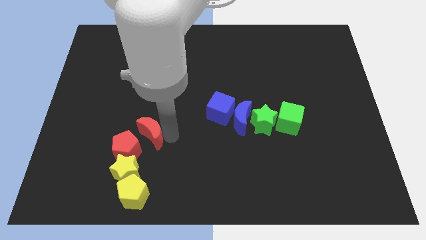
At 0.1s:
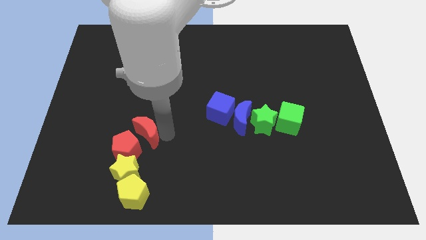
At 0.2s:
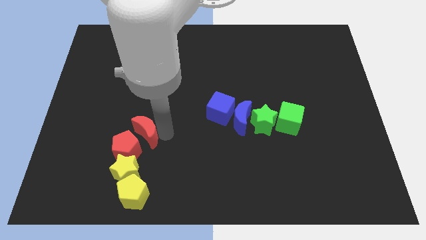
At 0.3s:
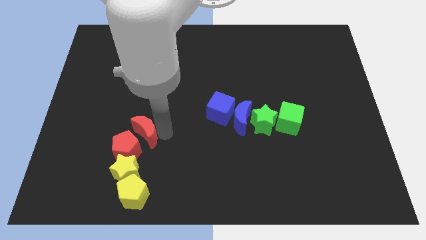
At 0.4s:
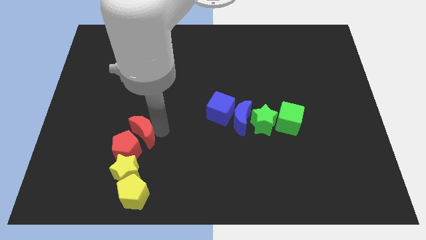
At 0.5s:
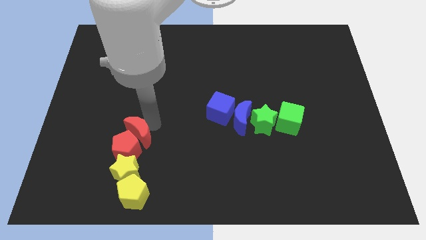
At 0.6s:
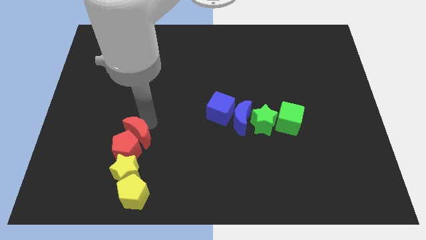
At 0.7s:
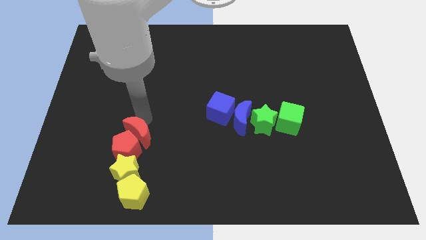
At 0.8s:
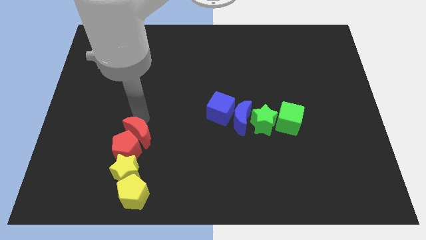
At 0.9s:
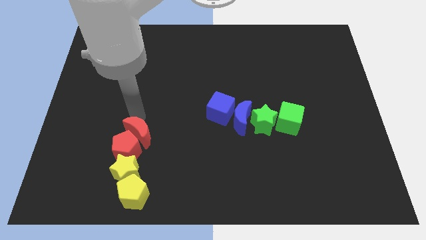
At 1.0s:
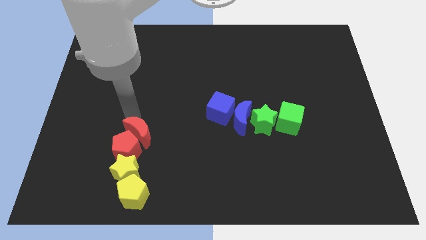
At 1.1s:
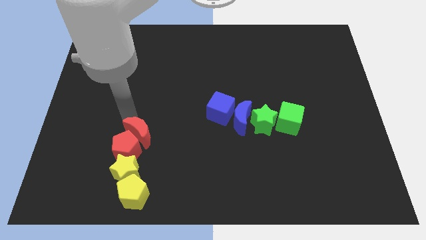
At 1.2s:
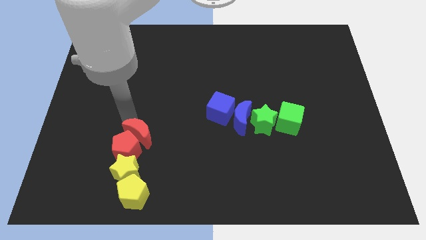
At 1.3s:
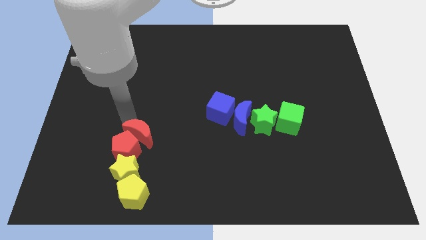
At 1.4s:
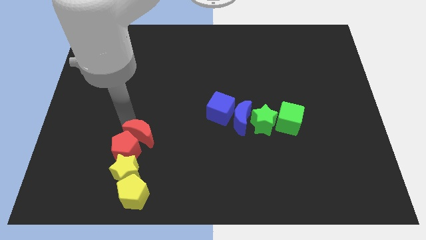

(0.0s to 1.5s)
move the red crescent into the red pentagon

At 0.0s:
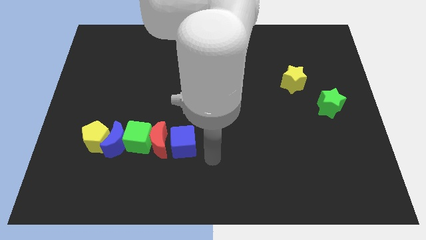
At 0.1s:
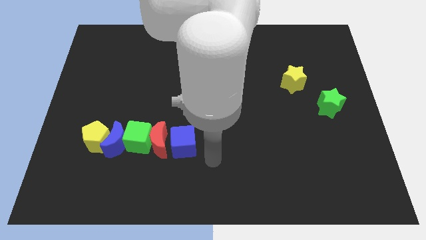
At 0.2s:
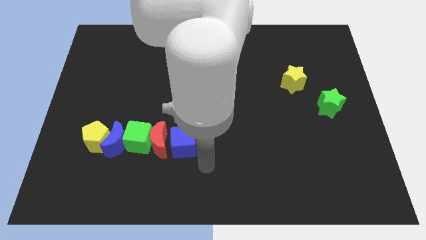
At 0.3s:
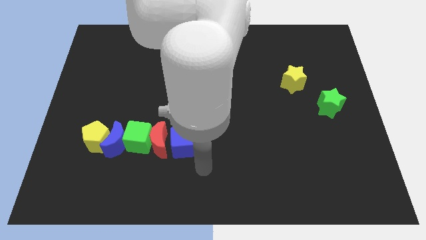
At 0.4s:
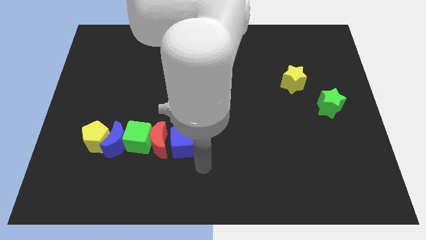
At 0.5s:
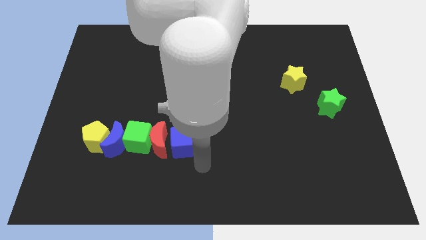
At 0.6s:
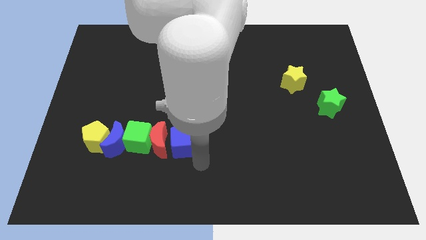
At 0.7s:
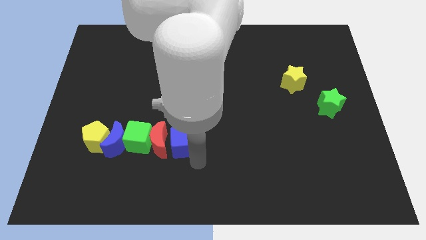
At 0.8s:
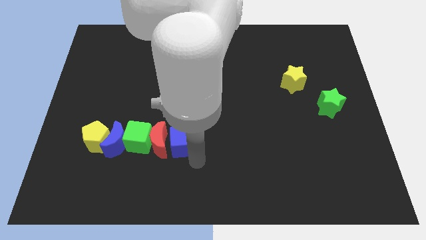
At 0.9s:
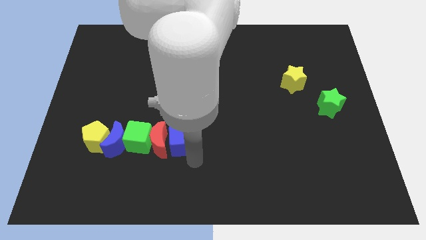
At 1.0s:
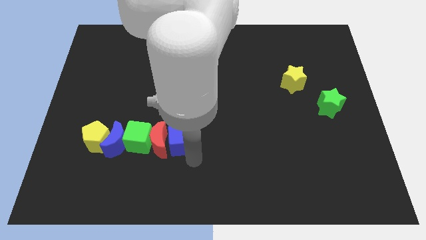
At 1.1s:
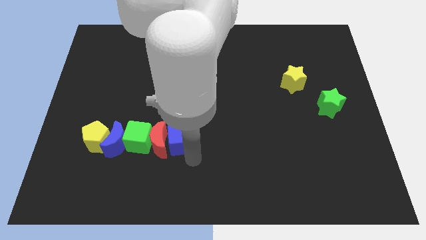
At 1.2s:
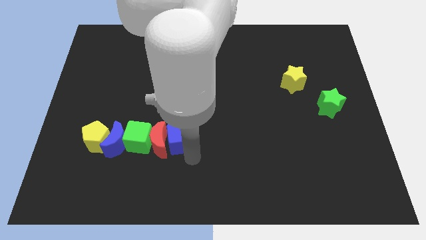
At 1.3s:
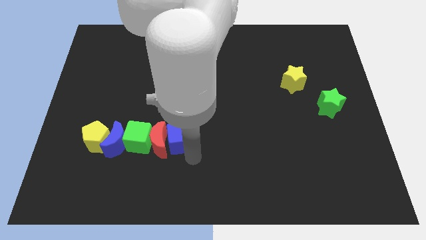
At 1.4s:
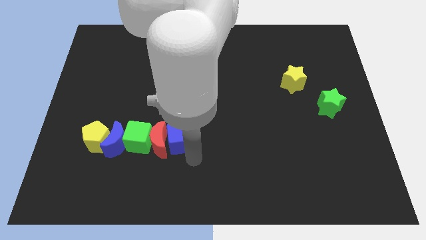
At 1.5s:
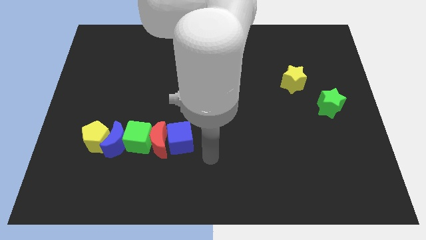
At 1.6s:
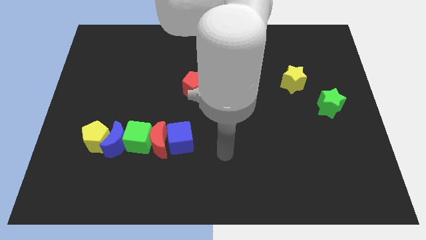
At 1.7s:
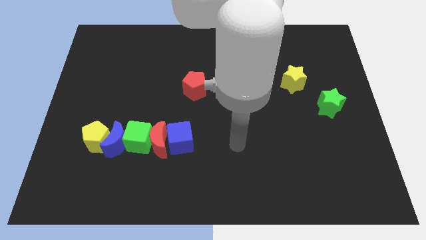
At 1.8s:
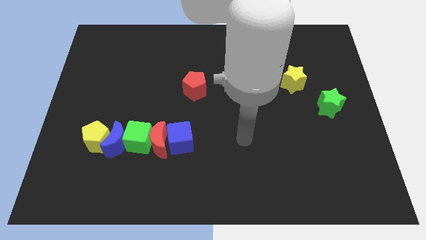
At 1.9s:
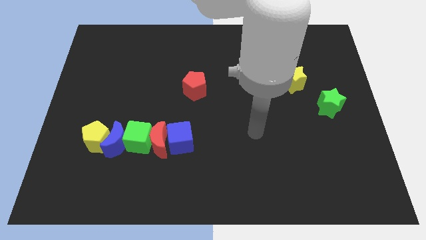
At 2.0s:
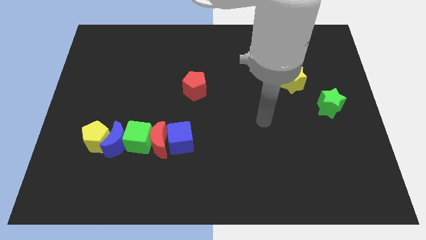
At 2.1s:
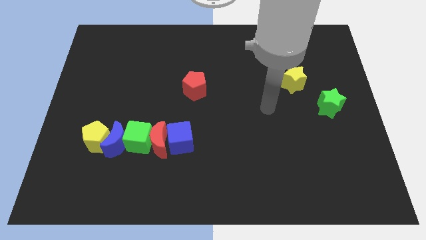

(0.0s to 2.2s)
move blue cube slightly up

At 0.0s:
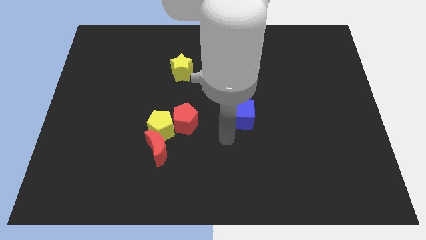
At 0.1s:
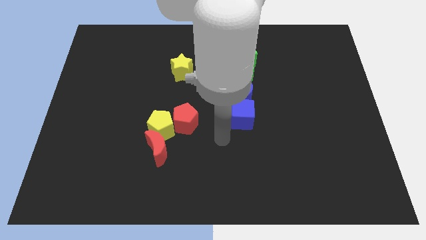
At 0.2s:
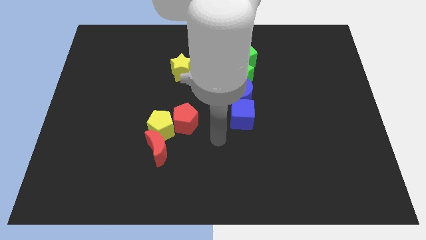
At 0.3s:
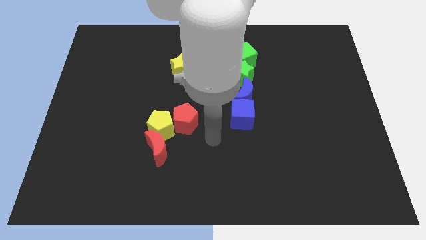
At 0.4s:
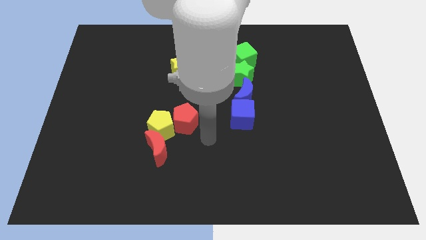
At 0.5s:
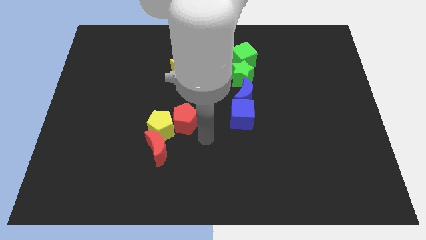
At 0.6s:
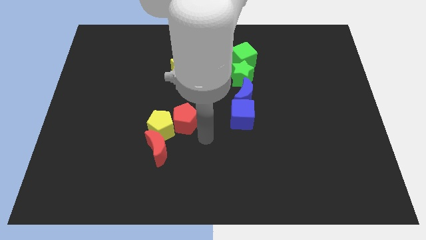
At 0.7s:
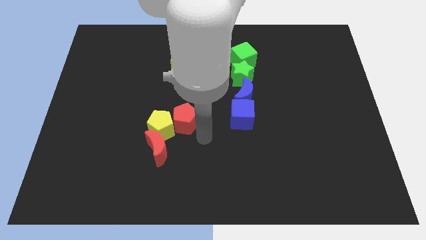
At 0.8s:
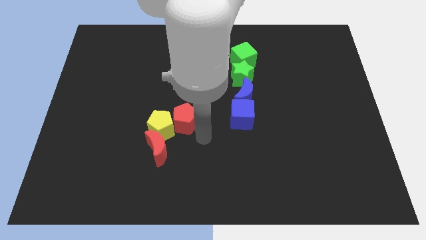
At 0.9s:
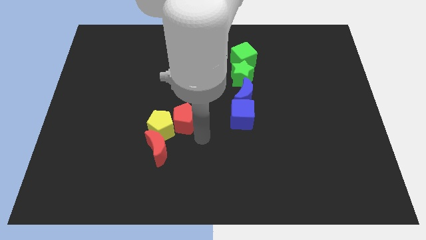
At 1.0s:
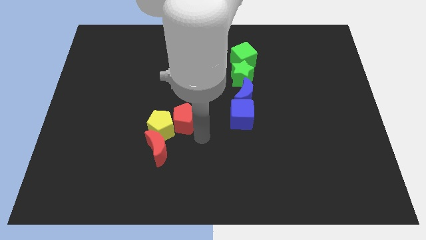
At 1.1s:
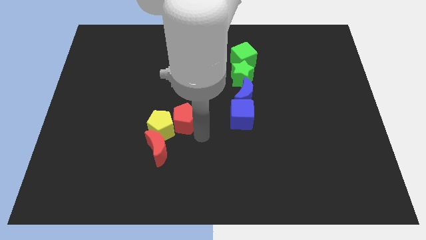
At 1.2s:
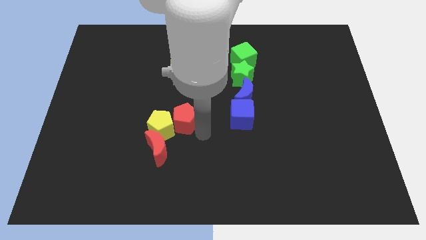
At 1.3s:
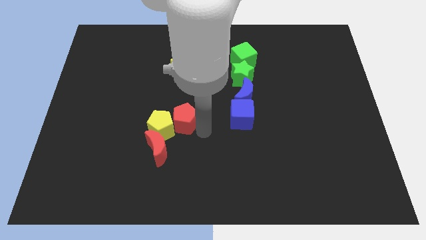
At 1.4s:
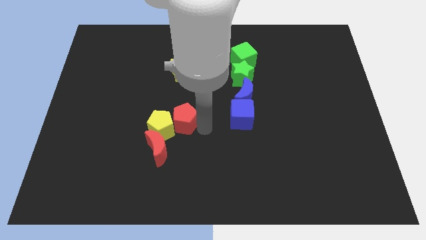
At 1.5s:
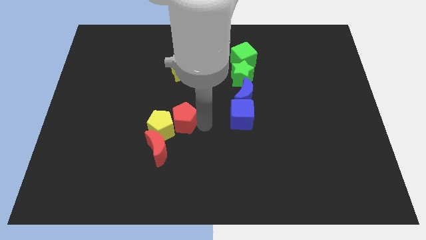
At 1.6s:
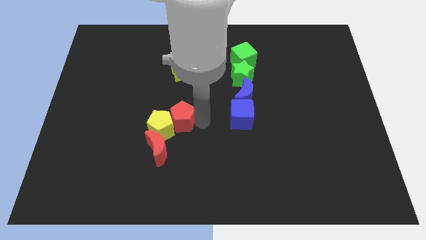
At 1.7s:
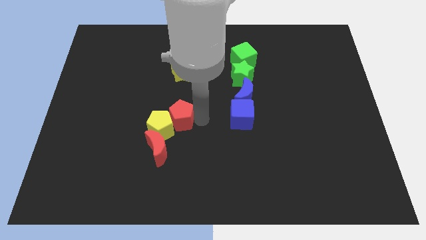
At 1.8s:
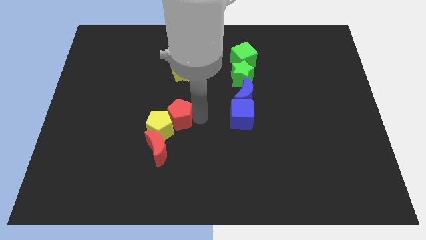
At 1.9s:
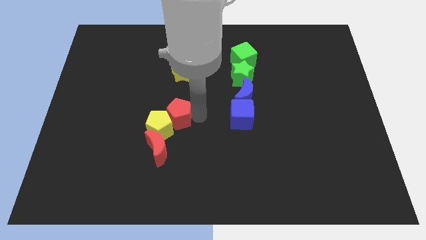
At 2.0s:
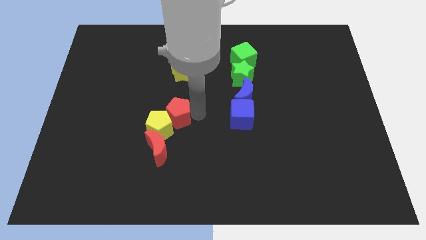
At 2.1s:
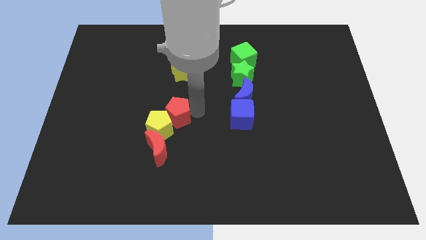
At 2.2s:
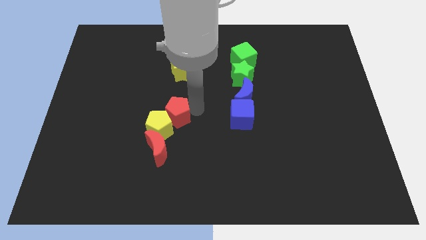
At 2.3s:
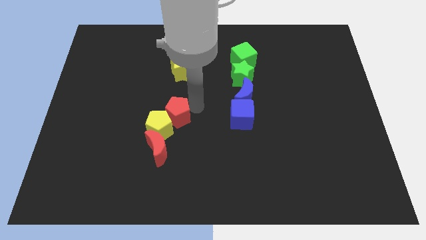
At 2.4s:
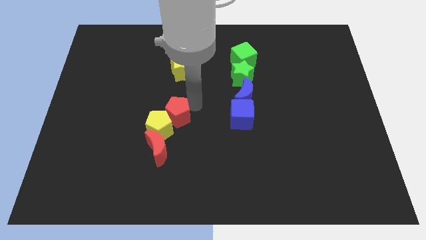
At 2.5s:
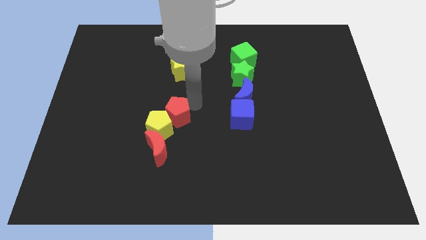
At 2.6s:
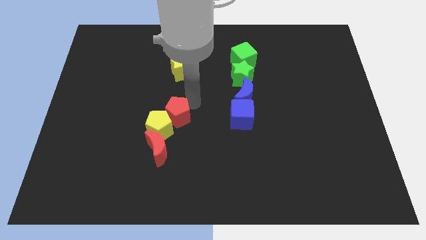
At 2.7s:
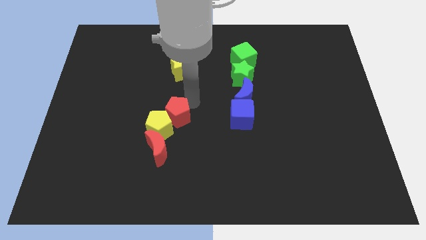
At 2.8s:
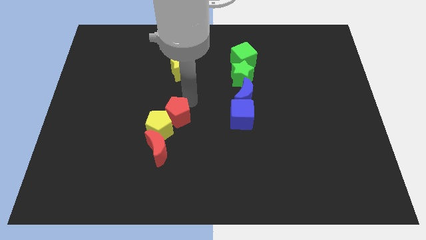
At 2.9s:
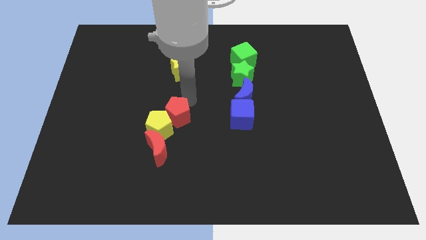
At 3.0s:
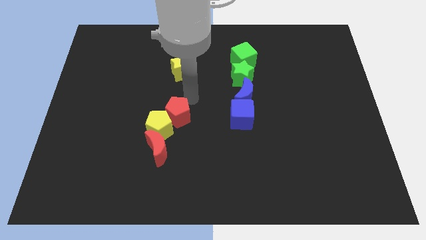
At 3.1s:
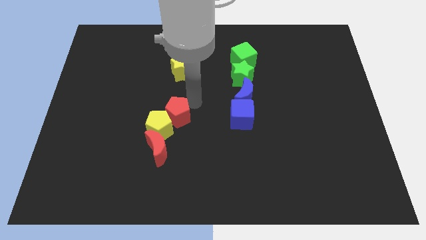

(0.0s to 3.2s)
tap the right side of the red pentagon

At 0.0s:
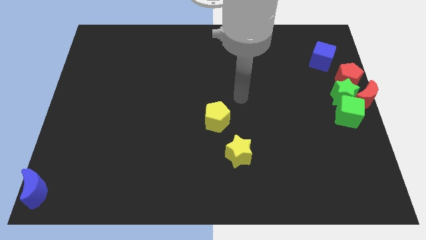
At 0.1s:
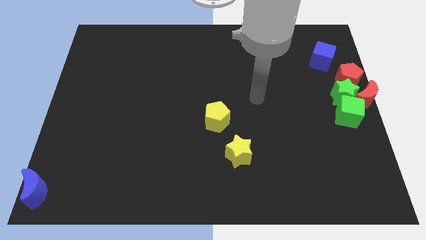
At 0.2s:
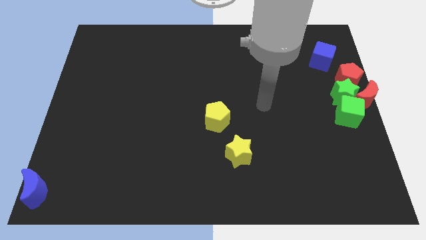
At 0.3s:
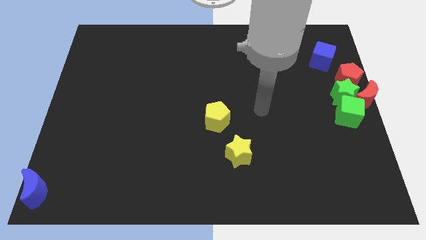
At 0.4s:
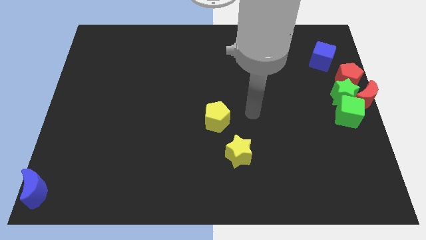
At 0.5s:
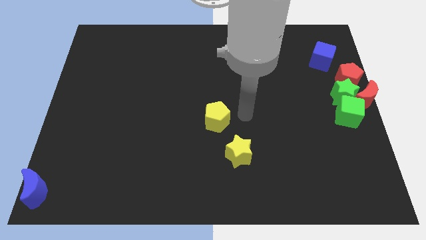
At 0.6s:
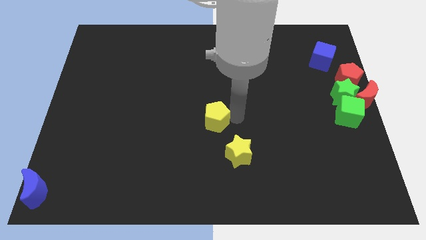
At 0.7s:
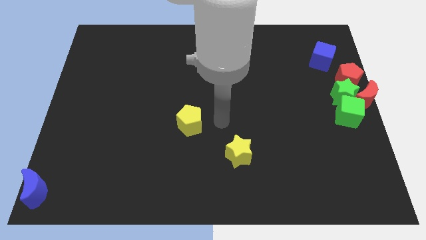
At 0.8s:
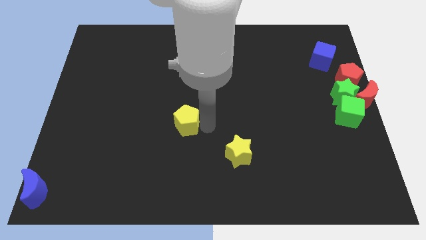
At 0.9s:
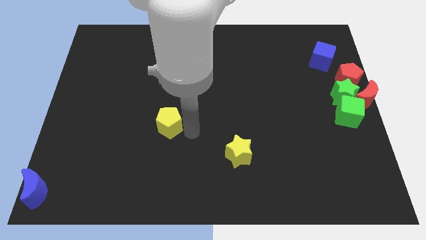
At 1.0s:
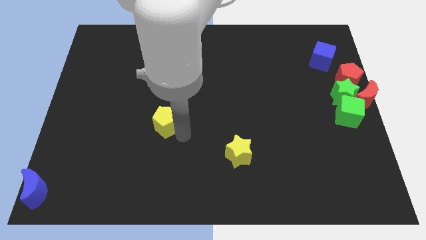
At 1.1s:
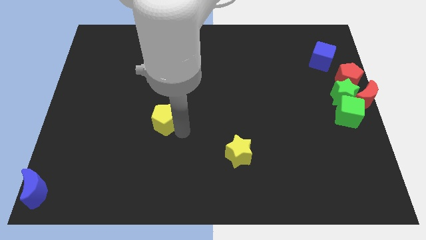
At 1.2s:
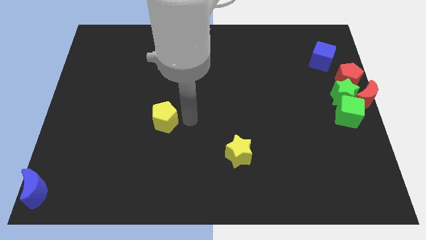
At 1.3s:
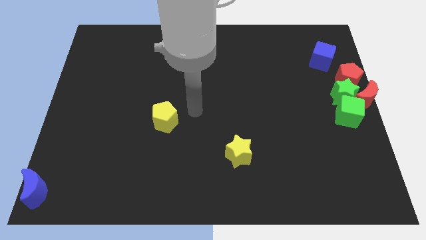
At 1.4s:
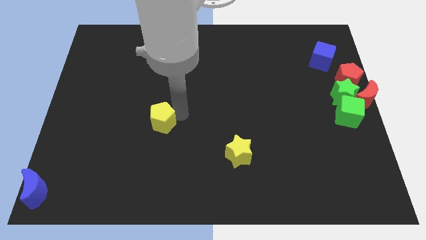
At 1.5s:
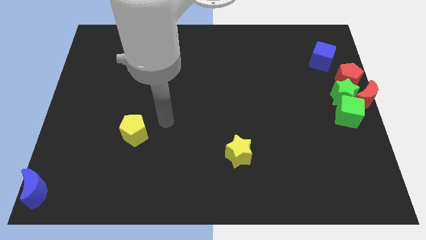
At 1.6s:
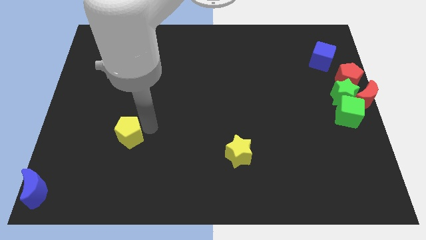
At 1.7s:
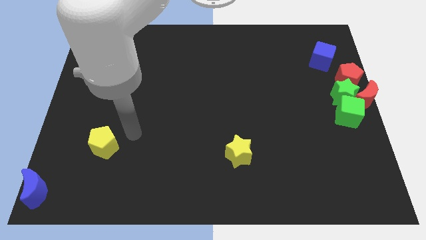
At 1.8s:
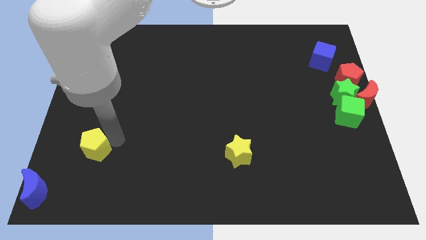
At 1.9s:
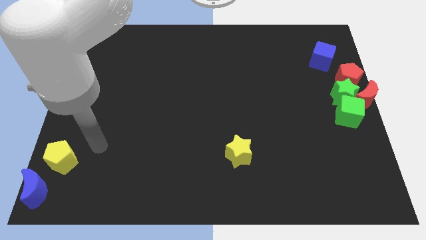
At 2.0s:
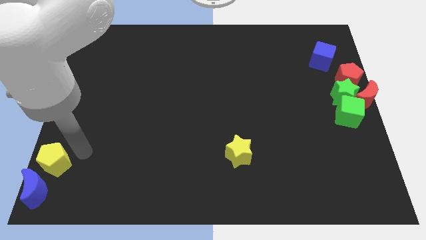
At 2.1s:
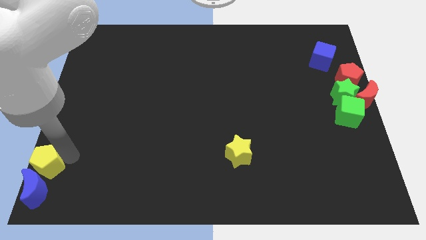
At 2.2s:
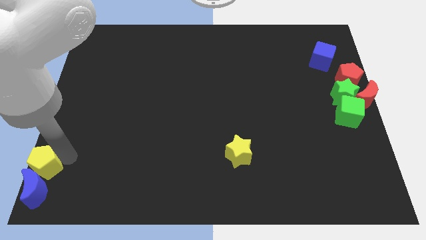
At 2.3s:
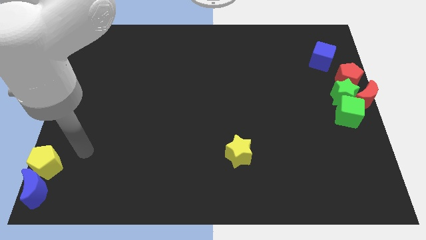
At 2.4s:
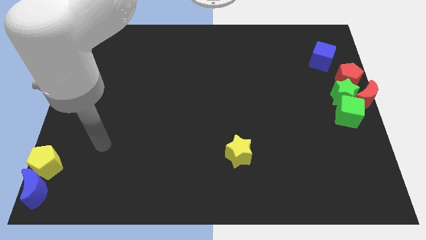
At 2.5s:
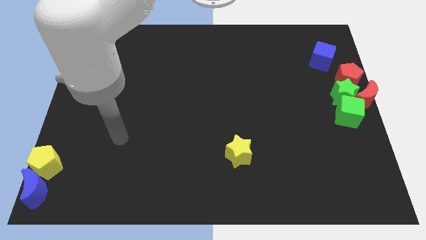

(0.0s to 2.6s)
move the yellow pentagon to the top of the blue crescent
